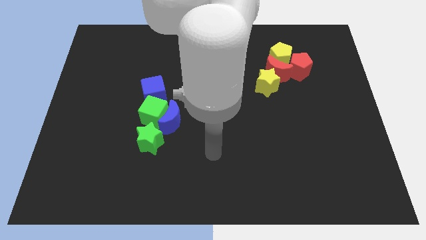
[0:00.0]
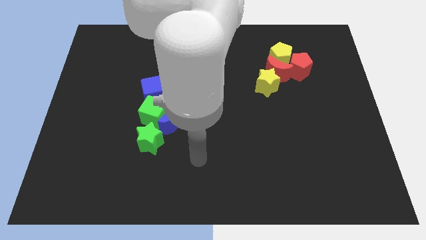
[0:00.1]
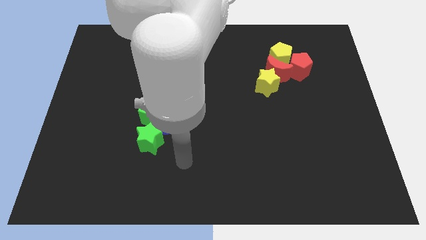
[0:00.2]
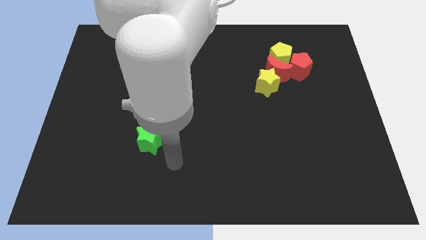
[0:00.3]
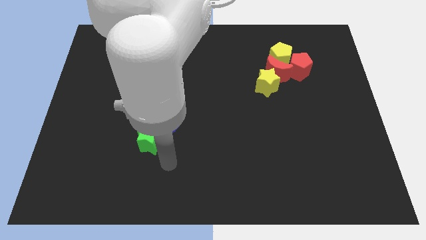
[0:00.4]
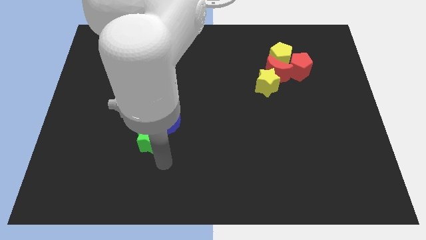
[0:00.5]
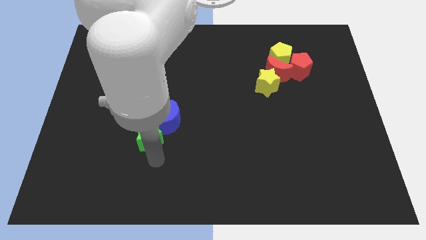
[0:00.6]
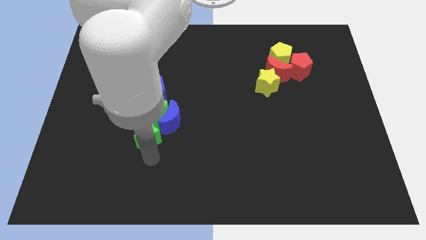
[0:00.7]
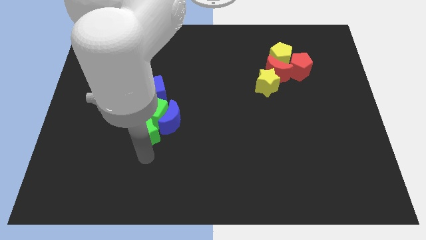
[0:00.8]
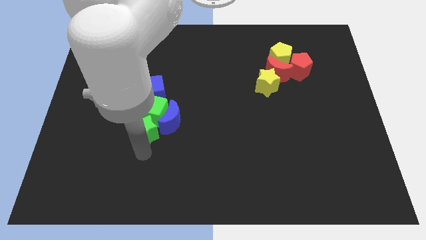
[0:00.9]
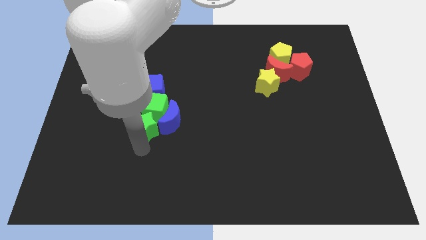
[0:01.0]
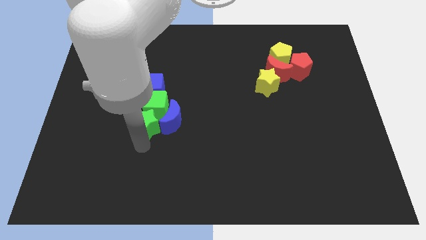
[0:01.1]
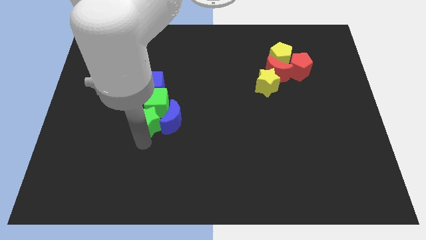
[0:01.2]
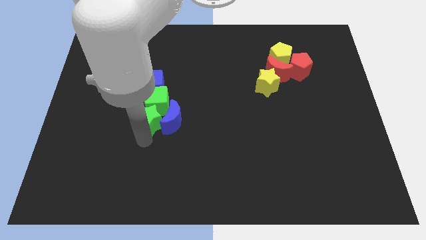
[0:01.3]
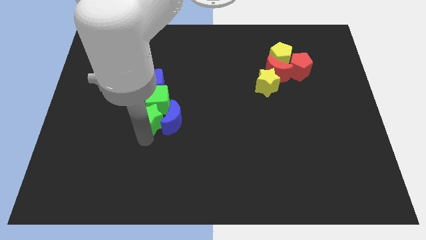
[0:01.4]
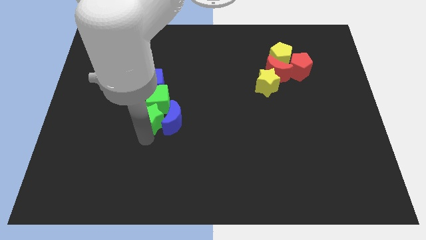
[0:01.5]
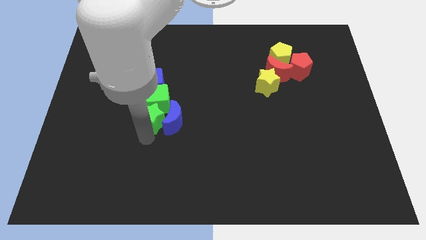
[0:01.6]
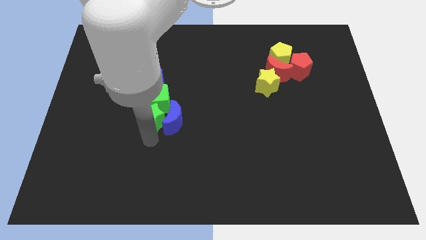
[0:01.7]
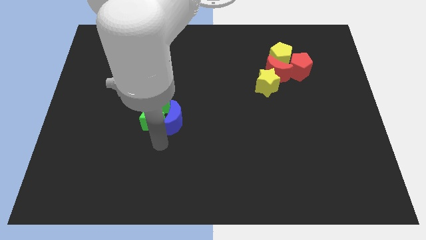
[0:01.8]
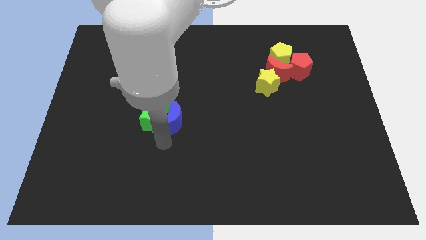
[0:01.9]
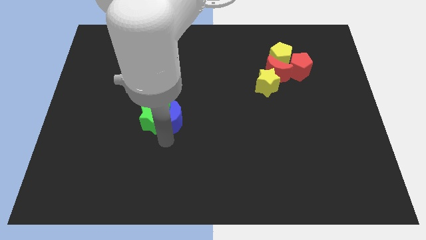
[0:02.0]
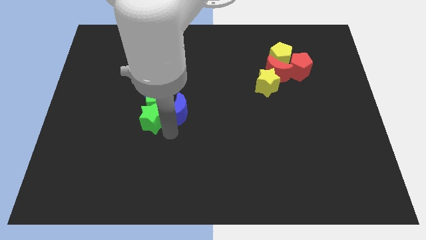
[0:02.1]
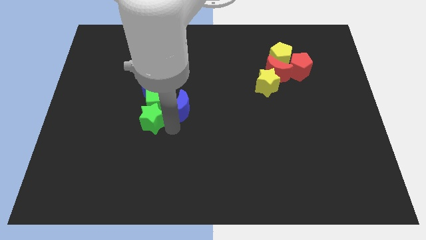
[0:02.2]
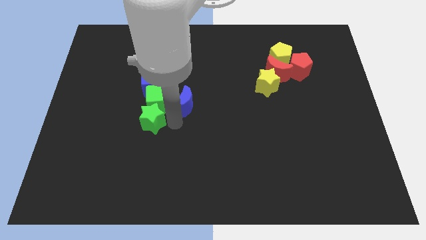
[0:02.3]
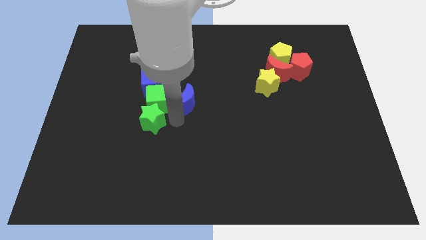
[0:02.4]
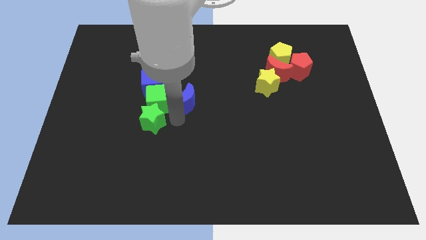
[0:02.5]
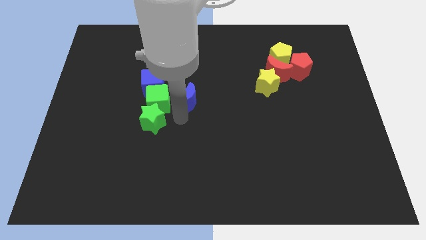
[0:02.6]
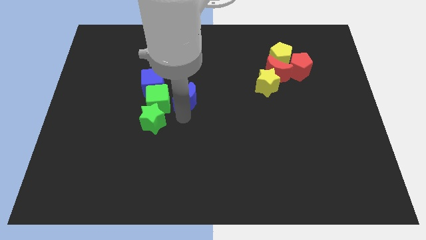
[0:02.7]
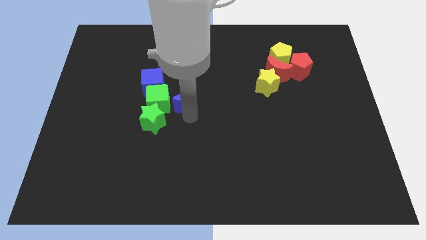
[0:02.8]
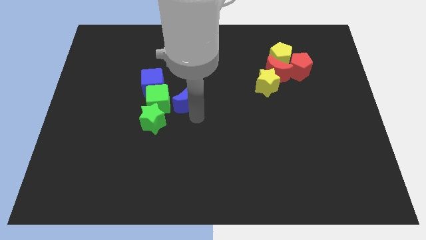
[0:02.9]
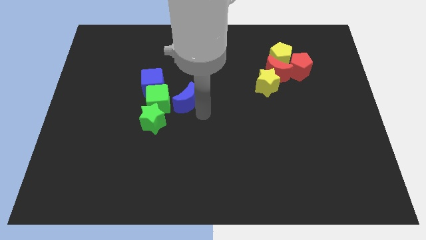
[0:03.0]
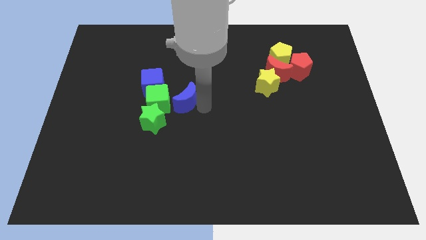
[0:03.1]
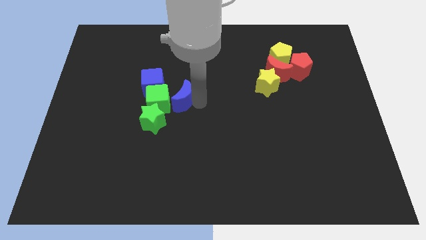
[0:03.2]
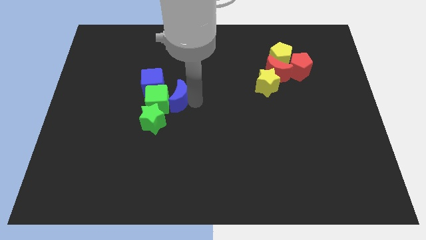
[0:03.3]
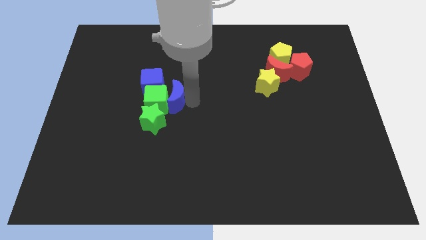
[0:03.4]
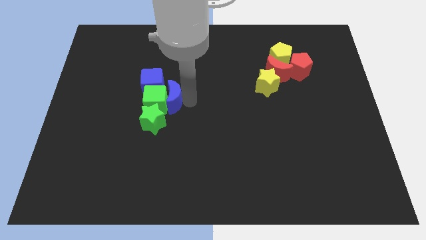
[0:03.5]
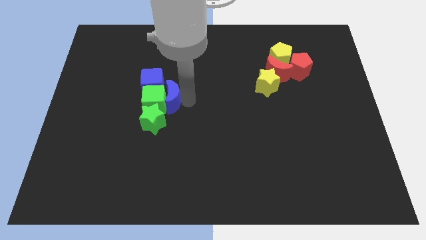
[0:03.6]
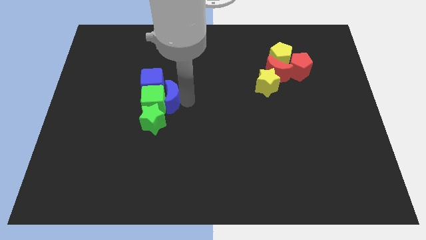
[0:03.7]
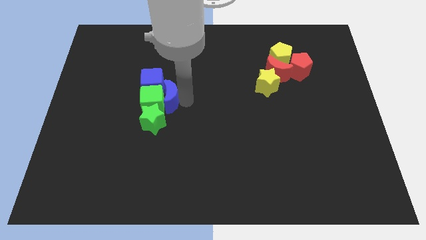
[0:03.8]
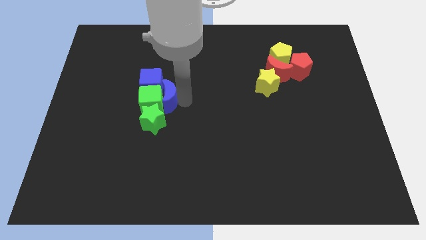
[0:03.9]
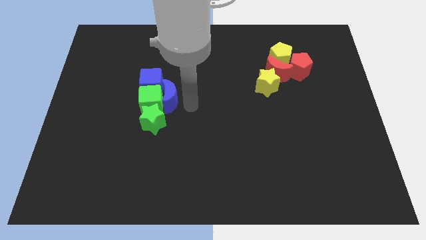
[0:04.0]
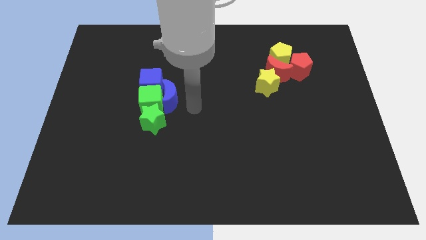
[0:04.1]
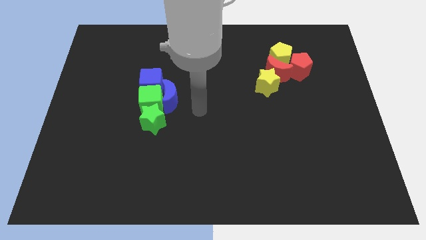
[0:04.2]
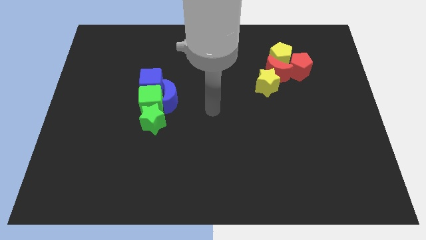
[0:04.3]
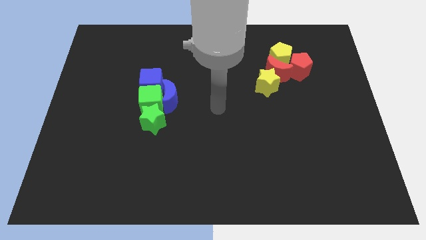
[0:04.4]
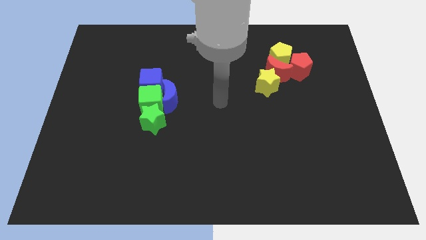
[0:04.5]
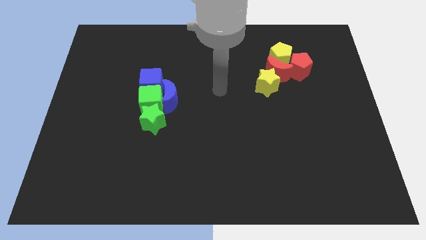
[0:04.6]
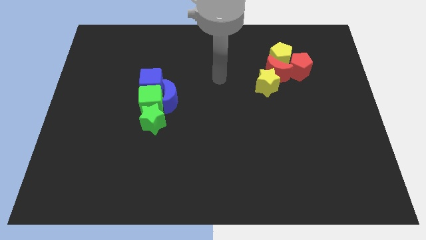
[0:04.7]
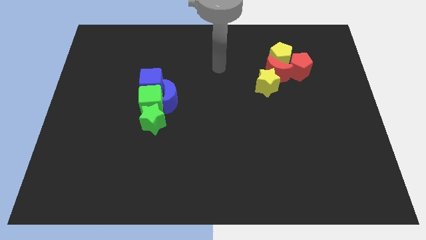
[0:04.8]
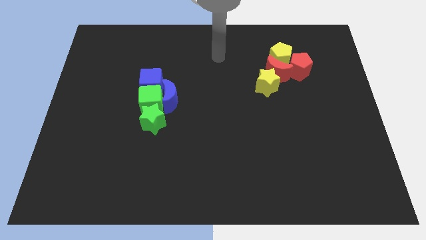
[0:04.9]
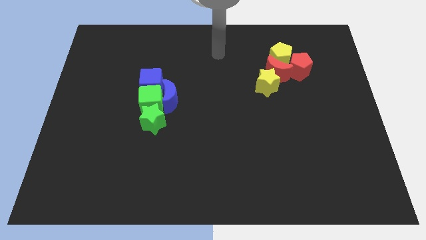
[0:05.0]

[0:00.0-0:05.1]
slide the blue moon into the green cube

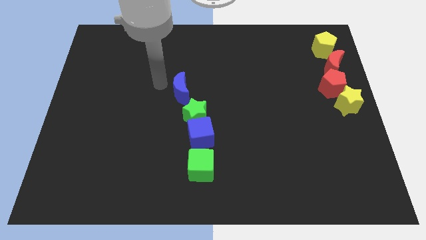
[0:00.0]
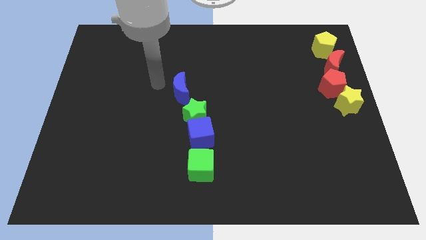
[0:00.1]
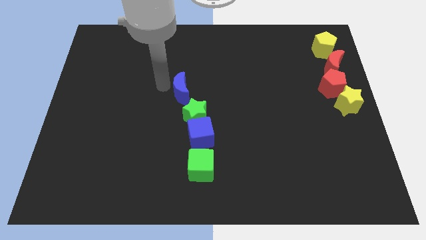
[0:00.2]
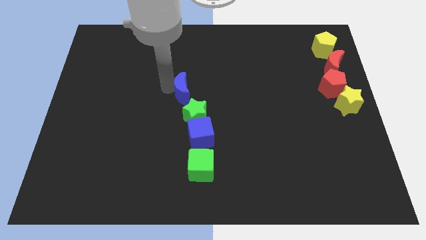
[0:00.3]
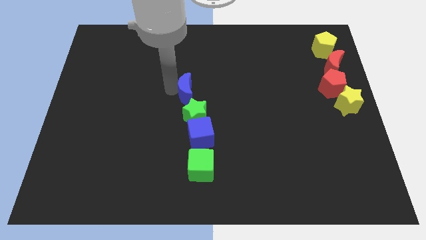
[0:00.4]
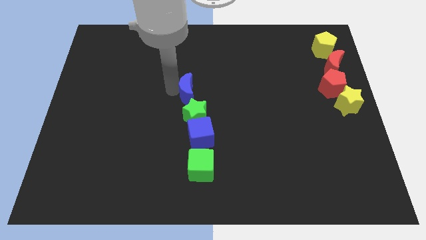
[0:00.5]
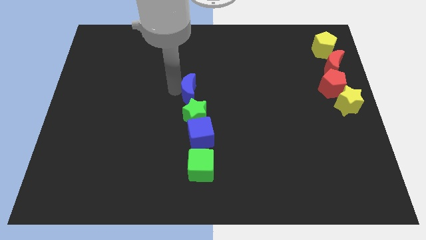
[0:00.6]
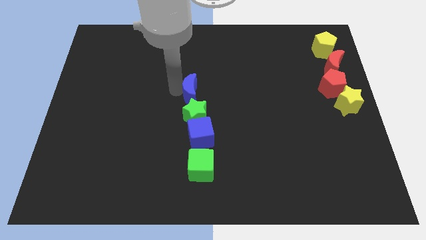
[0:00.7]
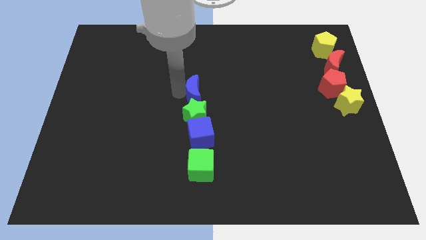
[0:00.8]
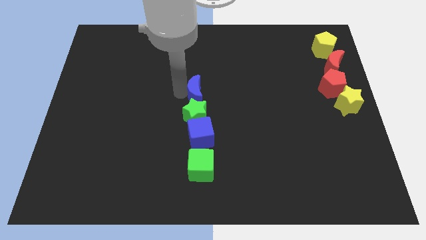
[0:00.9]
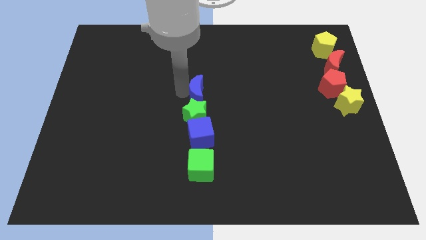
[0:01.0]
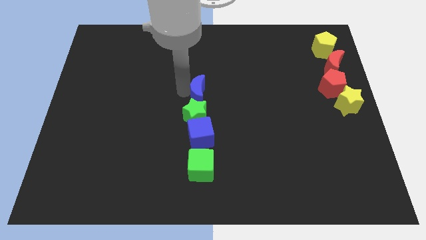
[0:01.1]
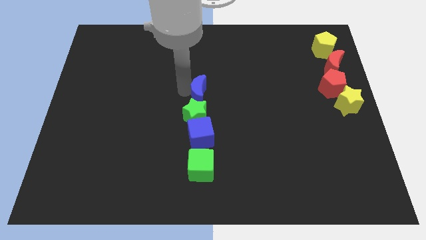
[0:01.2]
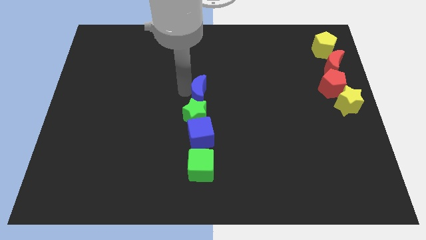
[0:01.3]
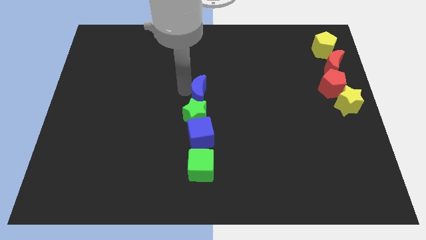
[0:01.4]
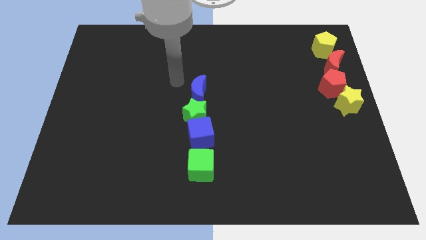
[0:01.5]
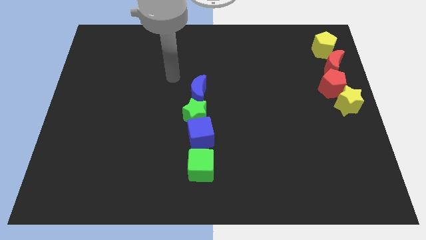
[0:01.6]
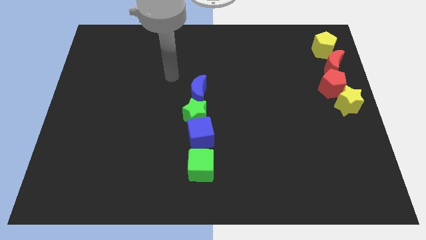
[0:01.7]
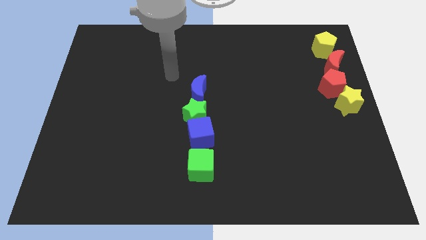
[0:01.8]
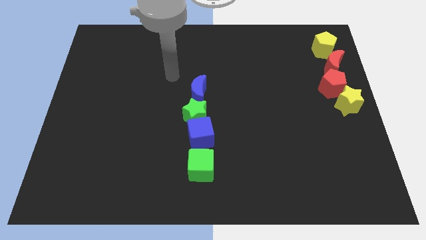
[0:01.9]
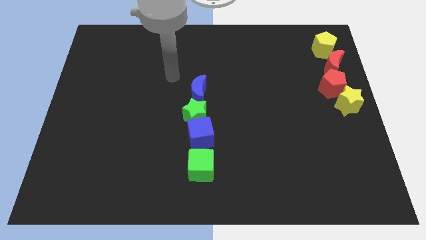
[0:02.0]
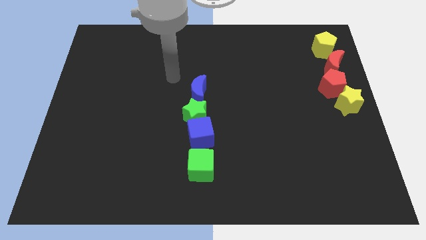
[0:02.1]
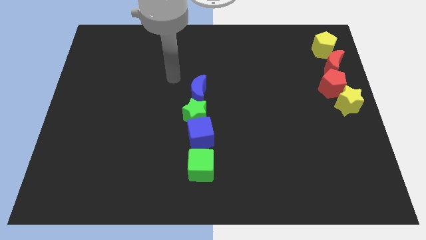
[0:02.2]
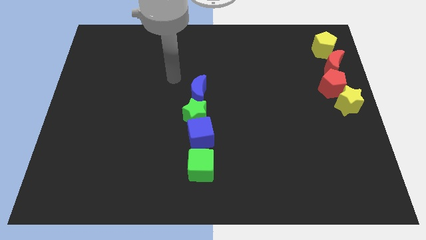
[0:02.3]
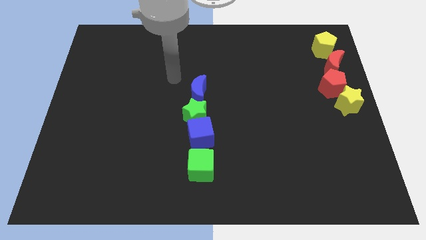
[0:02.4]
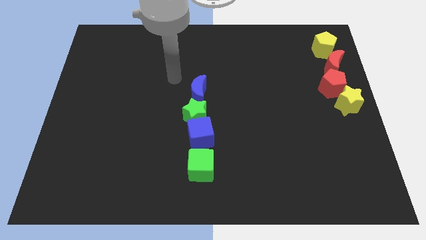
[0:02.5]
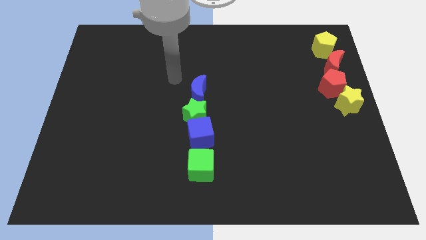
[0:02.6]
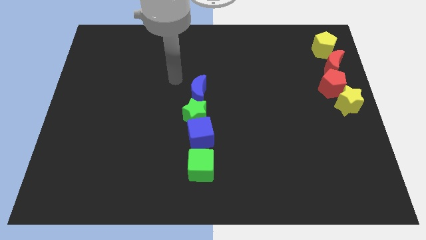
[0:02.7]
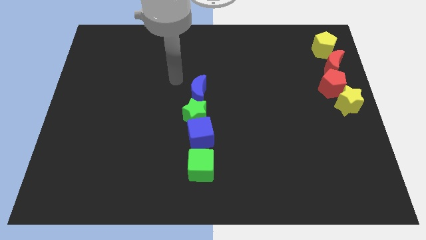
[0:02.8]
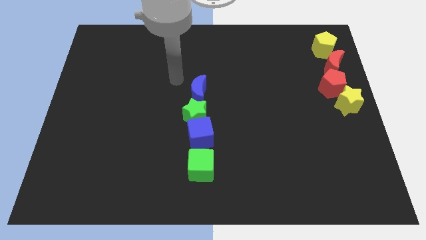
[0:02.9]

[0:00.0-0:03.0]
place blue moon above green star

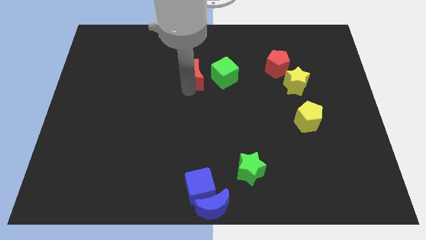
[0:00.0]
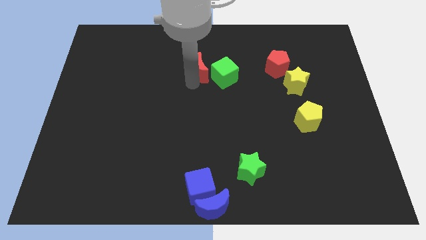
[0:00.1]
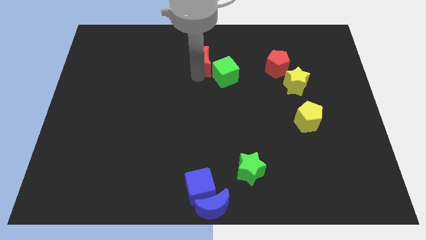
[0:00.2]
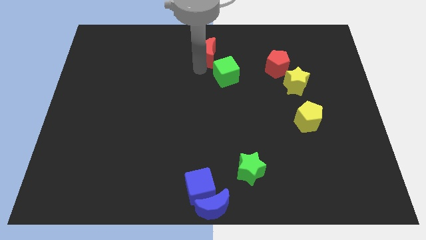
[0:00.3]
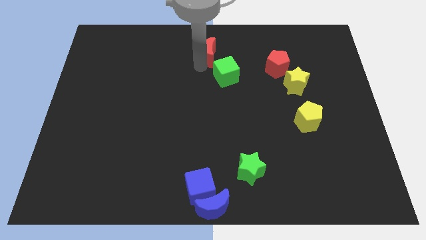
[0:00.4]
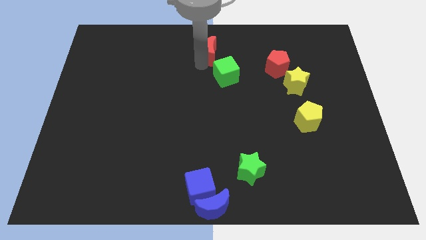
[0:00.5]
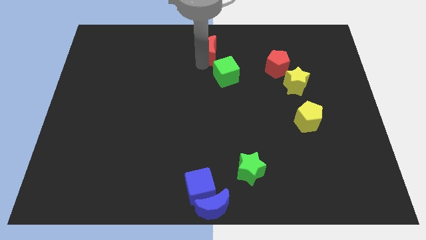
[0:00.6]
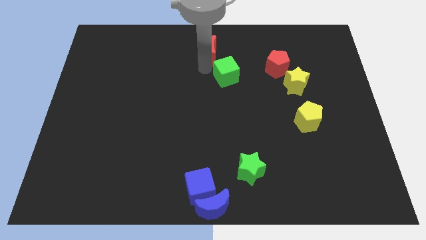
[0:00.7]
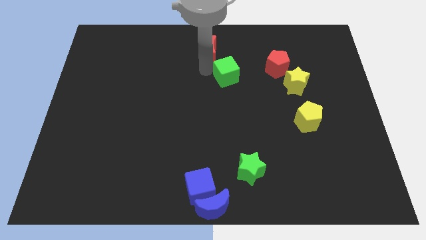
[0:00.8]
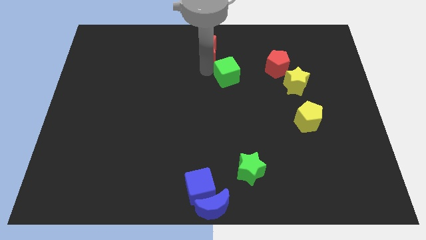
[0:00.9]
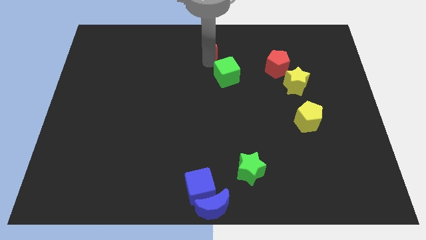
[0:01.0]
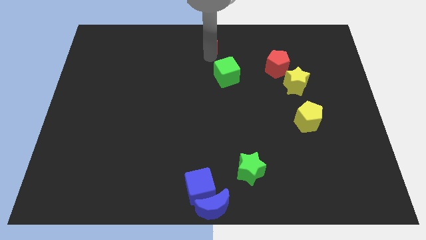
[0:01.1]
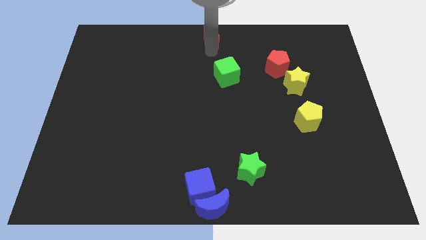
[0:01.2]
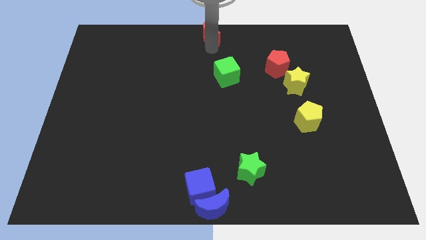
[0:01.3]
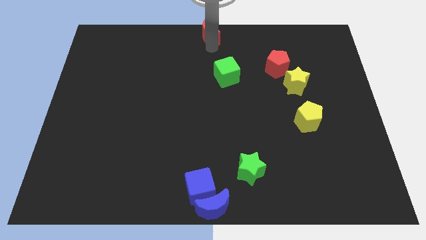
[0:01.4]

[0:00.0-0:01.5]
put the red crescent at the top center of the board
